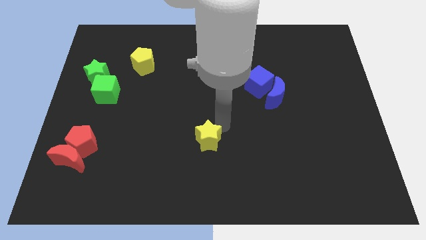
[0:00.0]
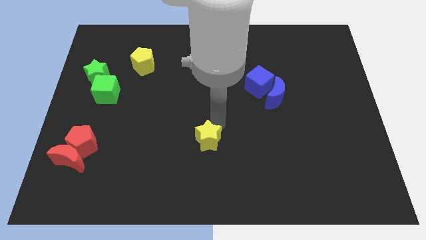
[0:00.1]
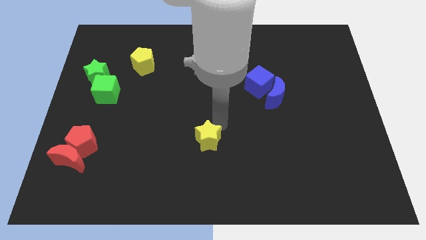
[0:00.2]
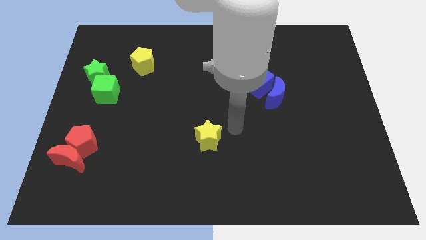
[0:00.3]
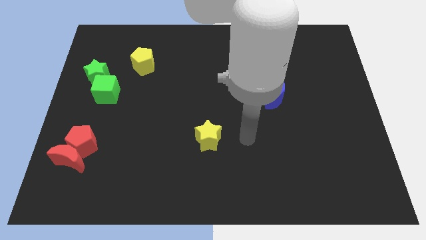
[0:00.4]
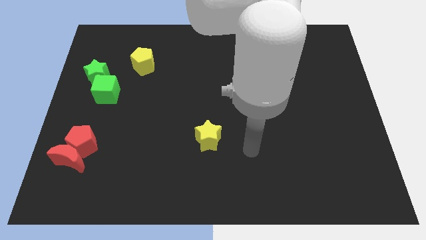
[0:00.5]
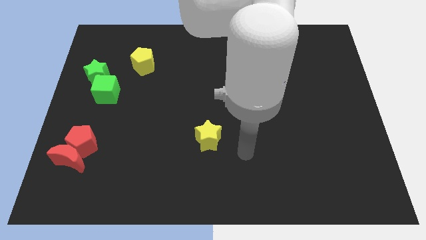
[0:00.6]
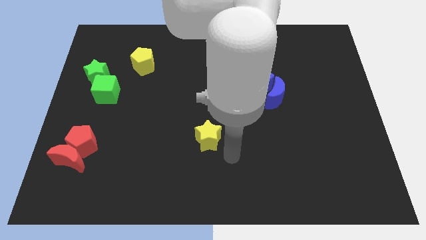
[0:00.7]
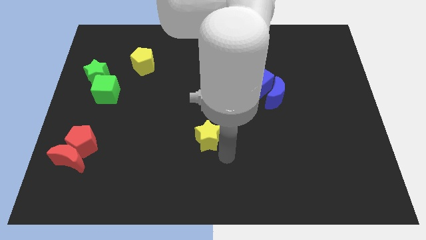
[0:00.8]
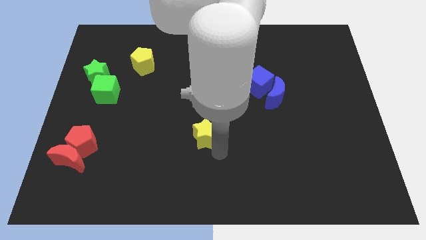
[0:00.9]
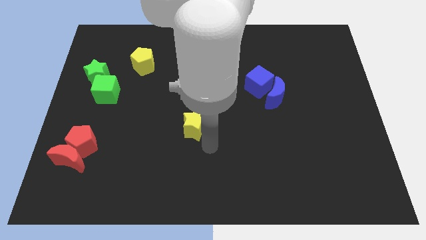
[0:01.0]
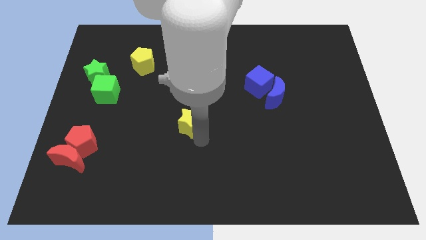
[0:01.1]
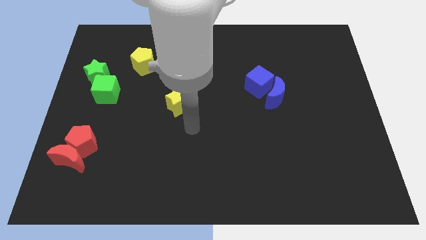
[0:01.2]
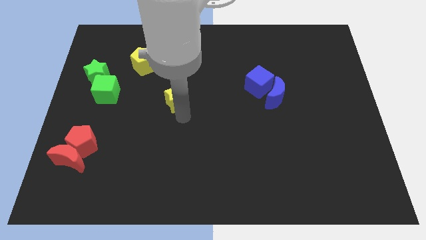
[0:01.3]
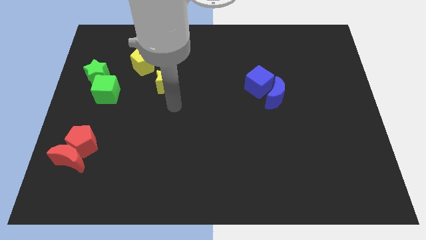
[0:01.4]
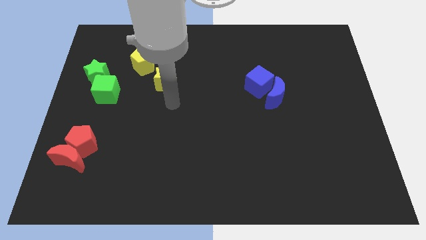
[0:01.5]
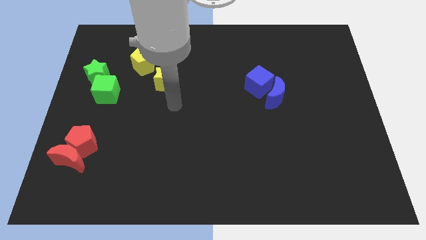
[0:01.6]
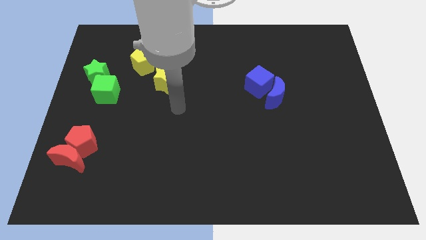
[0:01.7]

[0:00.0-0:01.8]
move the yellow star close to the yellow pentagon

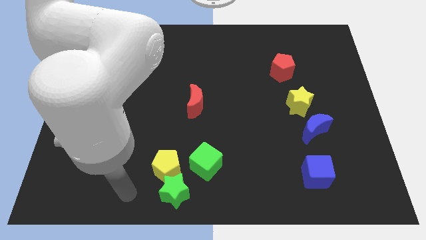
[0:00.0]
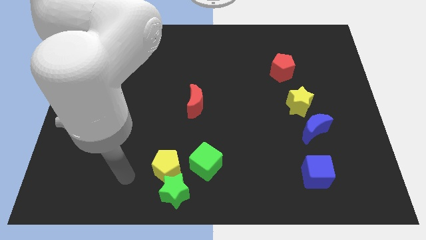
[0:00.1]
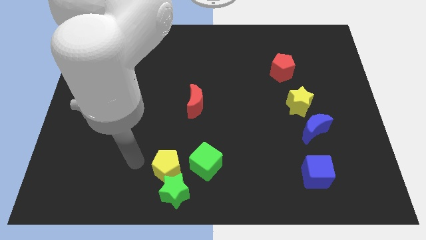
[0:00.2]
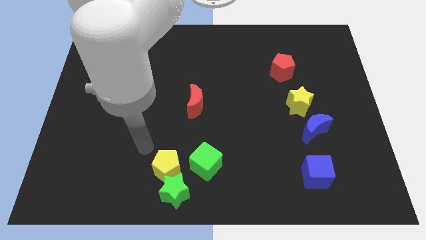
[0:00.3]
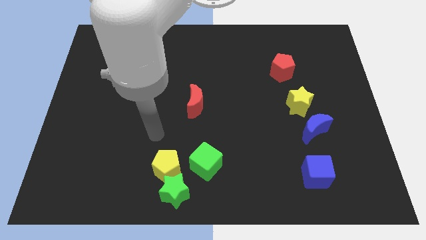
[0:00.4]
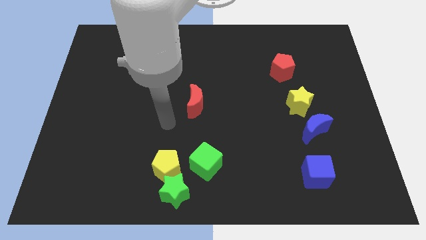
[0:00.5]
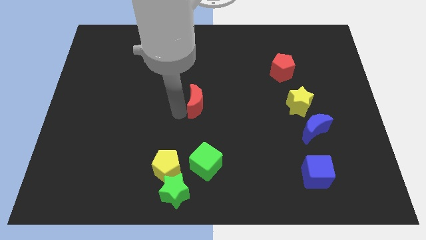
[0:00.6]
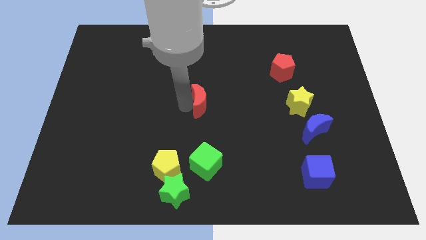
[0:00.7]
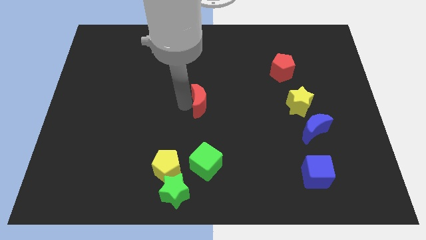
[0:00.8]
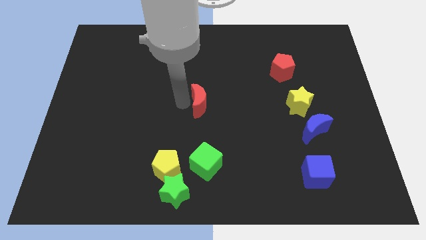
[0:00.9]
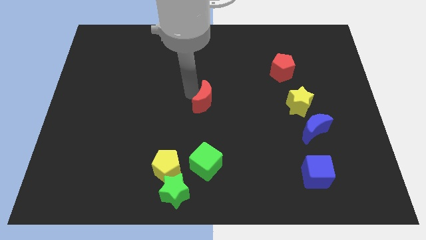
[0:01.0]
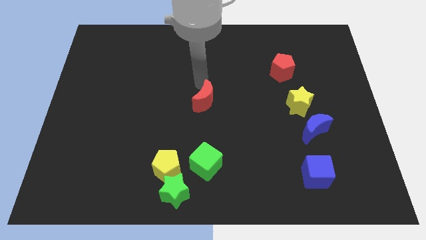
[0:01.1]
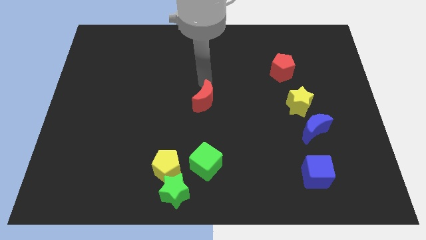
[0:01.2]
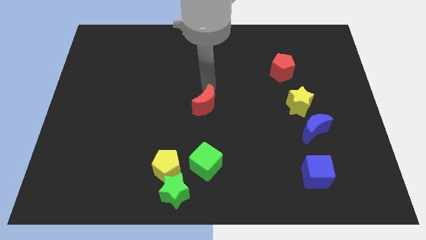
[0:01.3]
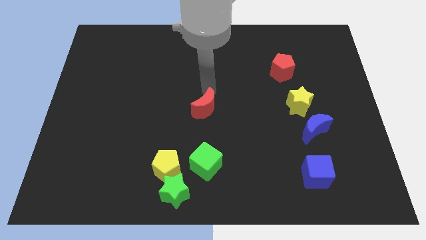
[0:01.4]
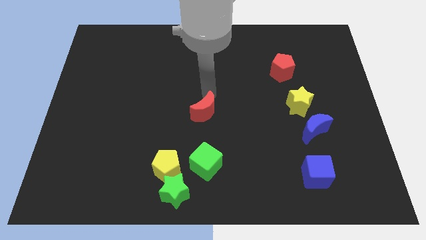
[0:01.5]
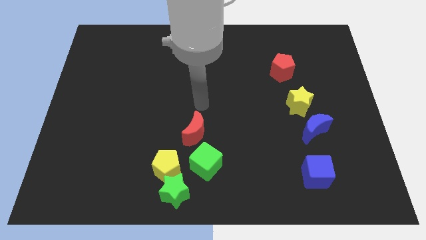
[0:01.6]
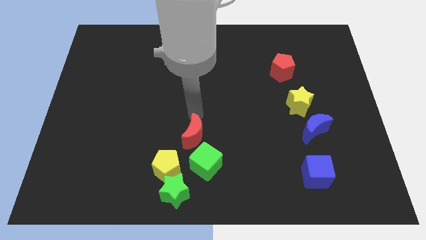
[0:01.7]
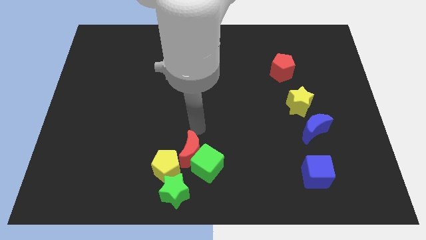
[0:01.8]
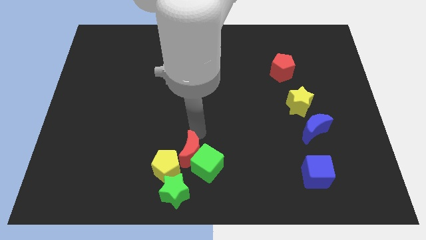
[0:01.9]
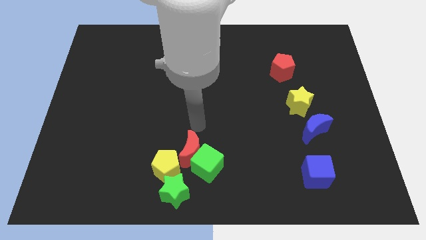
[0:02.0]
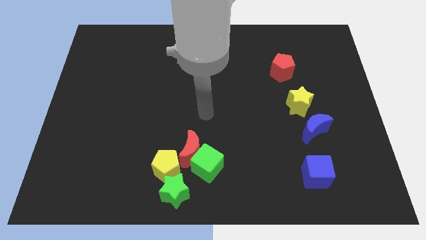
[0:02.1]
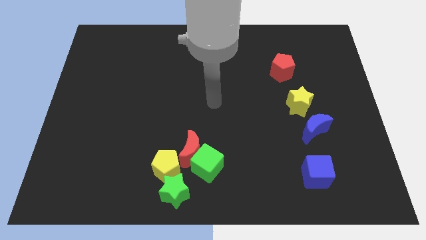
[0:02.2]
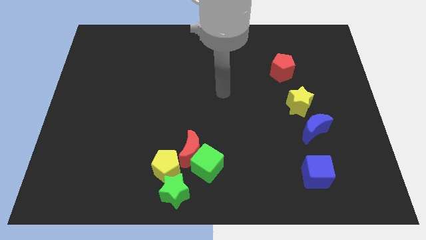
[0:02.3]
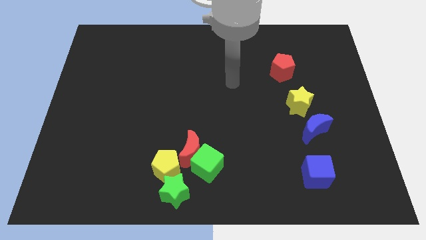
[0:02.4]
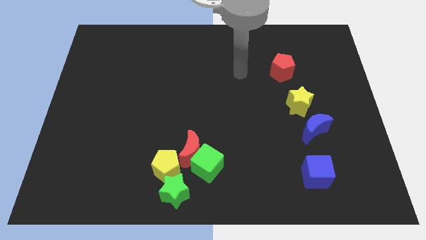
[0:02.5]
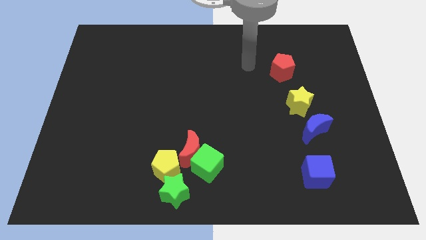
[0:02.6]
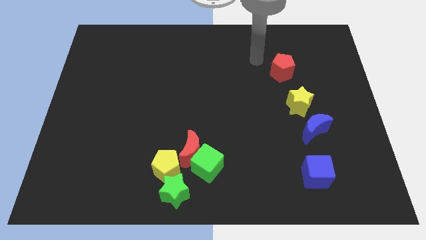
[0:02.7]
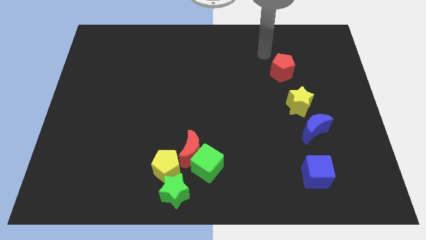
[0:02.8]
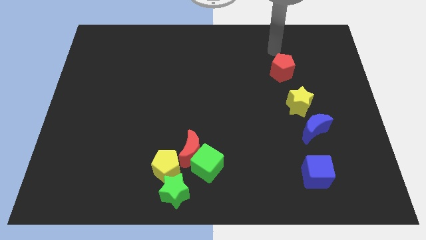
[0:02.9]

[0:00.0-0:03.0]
move the red crescent in to green cube

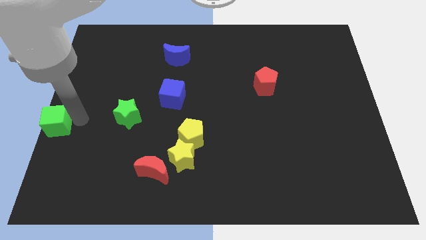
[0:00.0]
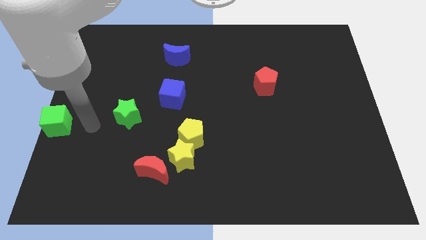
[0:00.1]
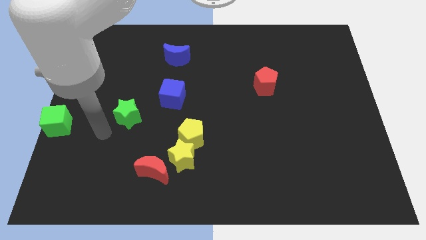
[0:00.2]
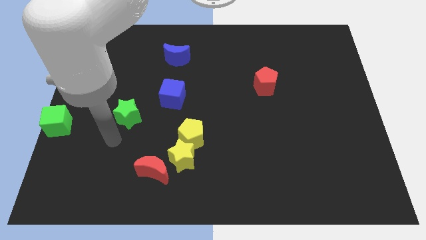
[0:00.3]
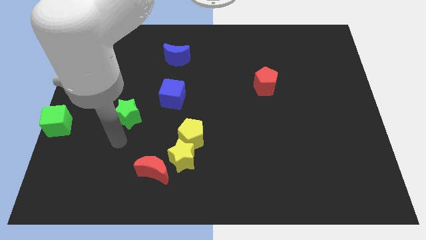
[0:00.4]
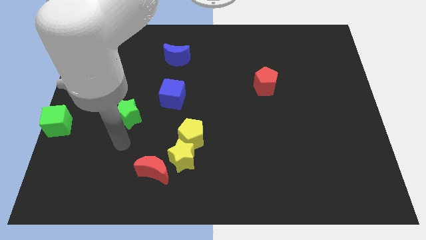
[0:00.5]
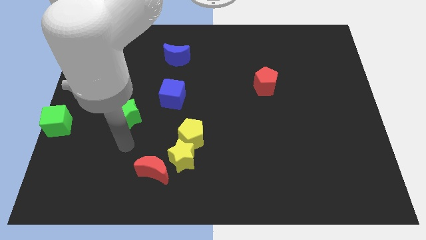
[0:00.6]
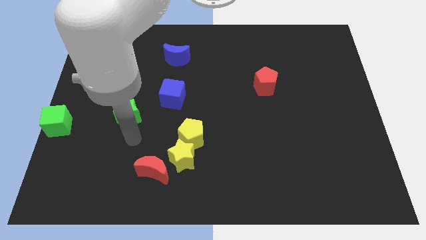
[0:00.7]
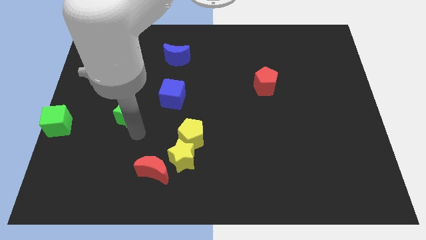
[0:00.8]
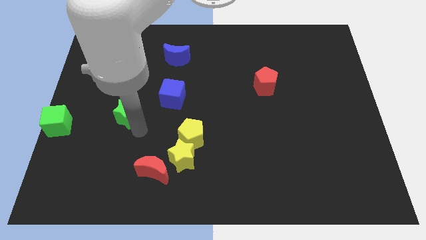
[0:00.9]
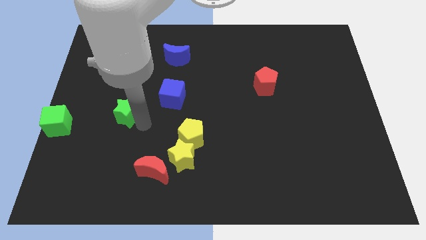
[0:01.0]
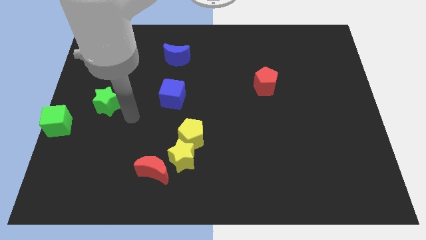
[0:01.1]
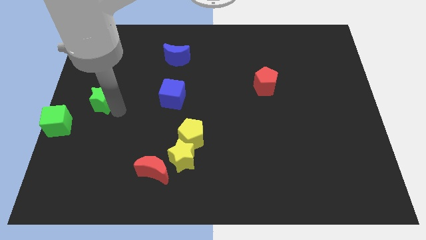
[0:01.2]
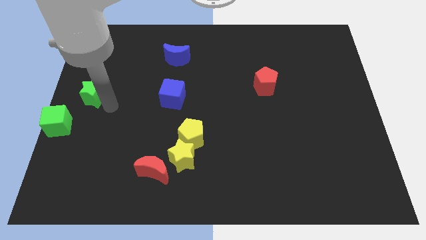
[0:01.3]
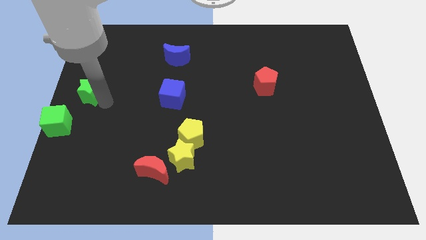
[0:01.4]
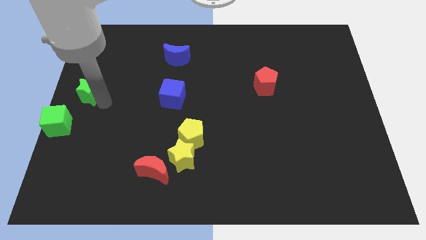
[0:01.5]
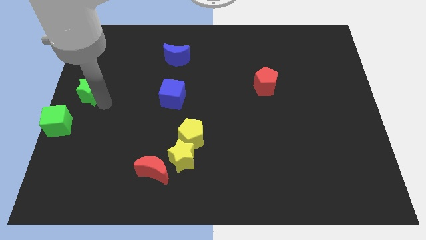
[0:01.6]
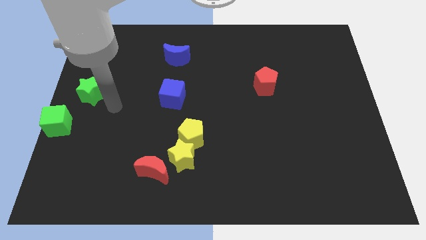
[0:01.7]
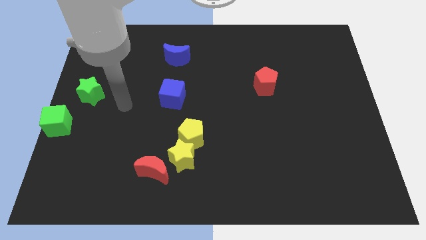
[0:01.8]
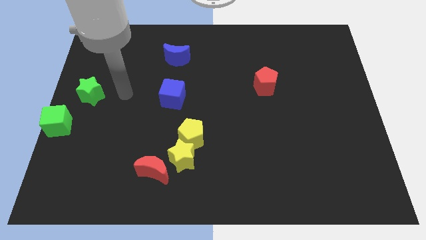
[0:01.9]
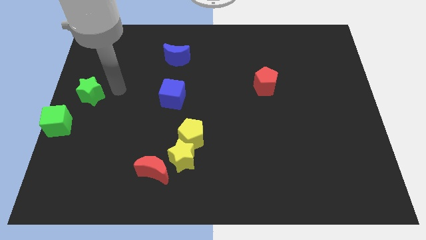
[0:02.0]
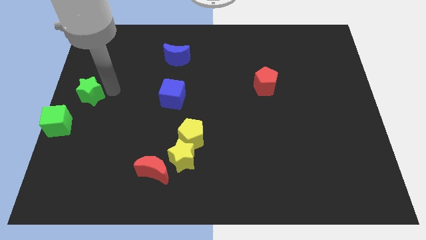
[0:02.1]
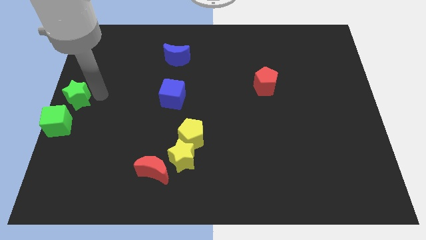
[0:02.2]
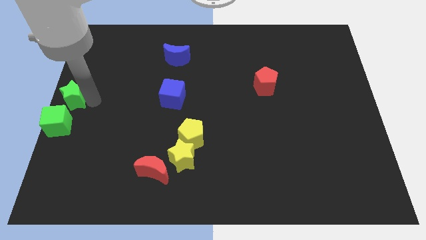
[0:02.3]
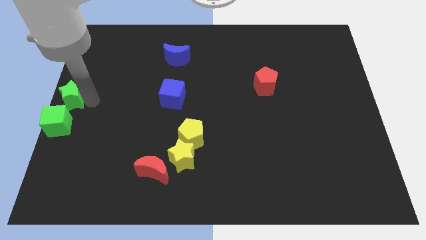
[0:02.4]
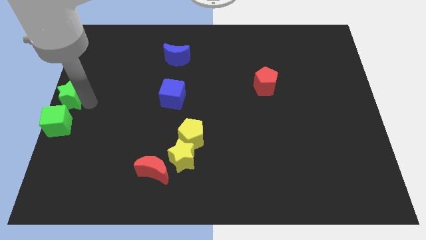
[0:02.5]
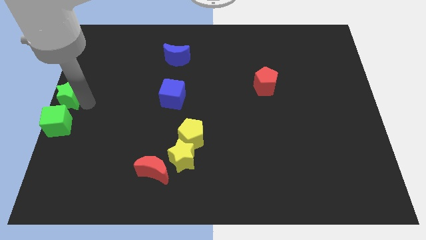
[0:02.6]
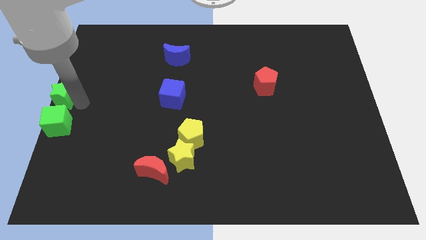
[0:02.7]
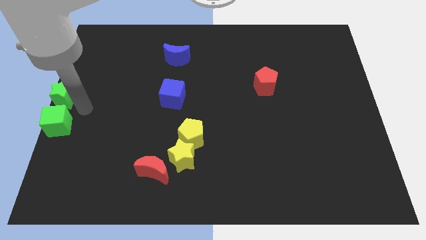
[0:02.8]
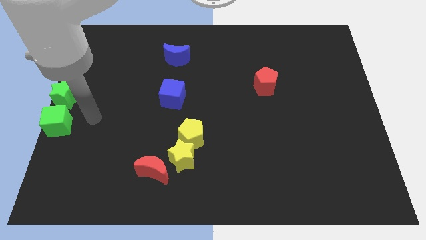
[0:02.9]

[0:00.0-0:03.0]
push the green star to the top of the green cube

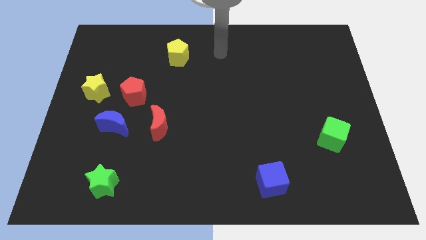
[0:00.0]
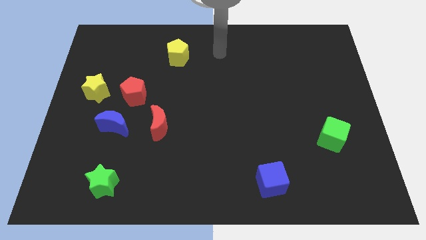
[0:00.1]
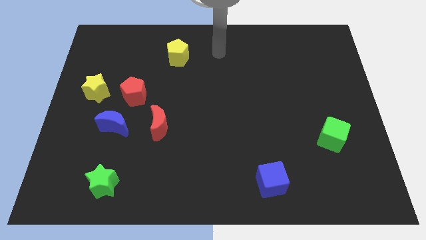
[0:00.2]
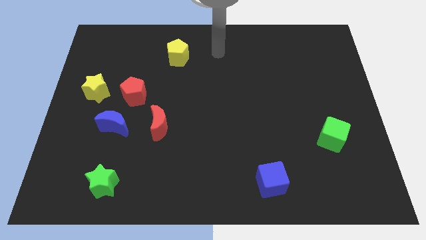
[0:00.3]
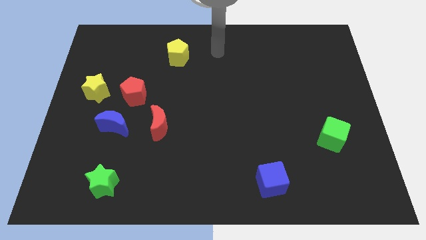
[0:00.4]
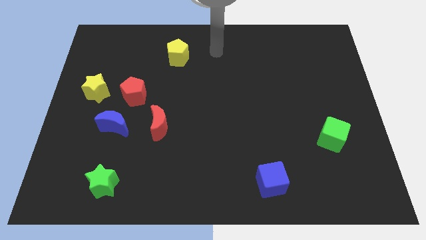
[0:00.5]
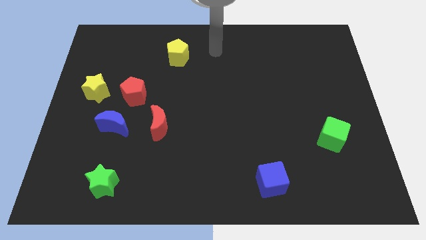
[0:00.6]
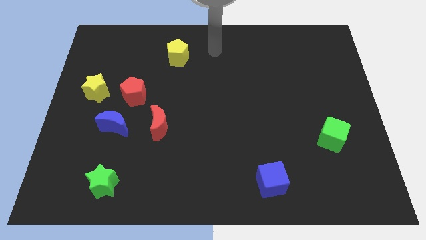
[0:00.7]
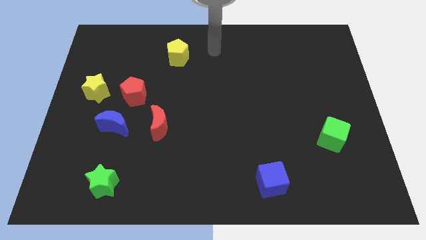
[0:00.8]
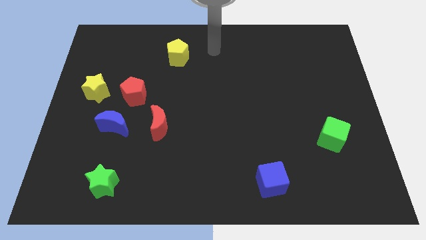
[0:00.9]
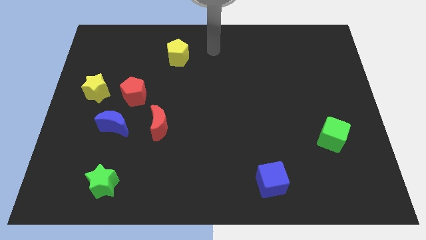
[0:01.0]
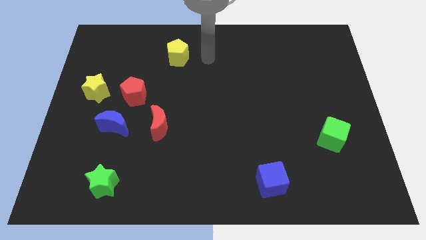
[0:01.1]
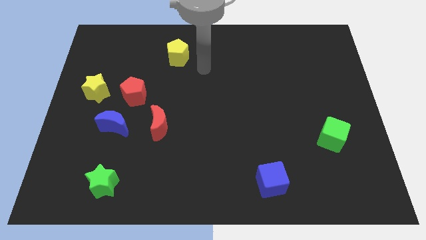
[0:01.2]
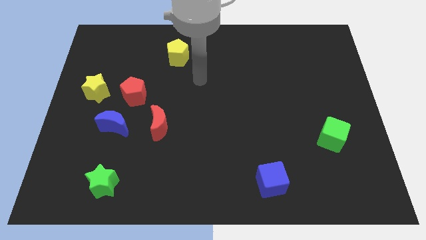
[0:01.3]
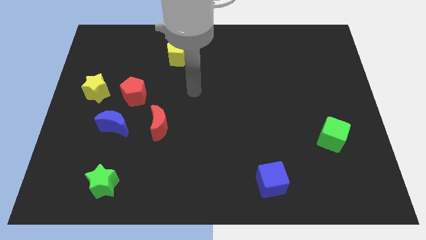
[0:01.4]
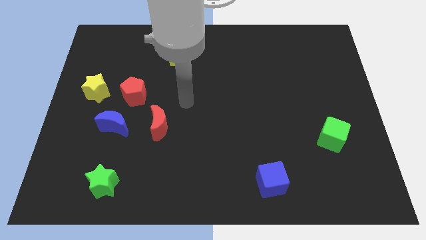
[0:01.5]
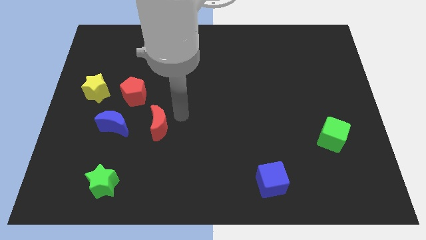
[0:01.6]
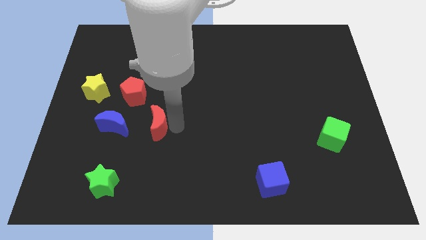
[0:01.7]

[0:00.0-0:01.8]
move your arm near to the red moon
